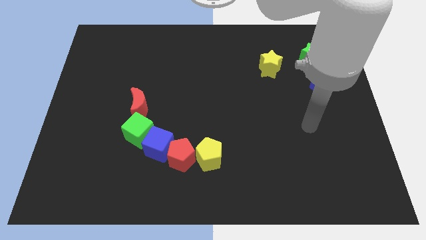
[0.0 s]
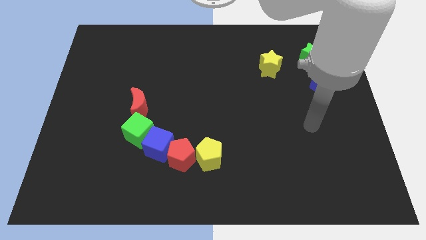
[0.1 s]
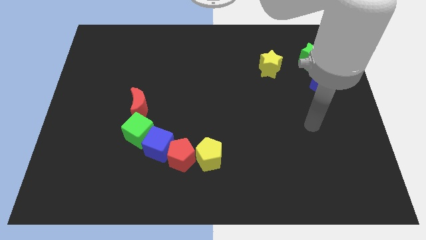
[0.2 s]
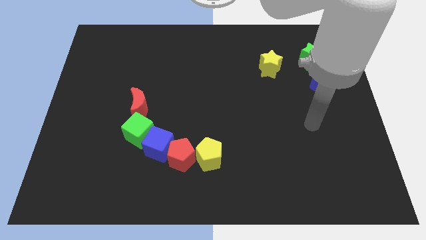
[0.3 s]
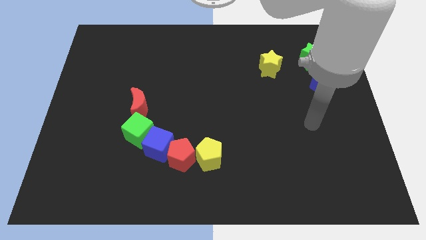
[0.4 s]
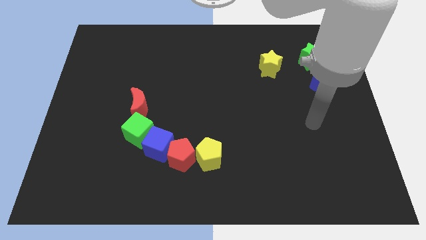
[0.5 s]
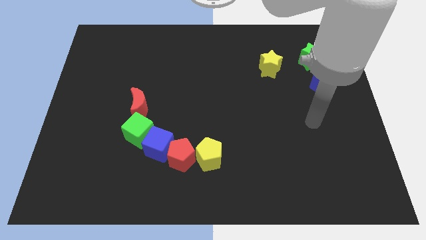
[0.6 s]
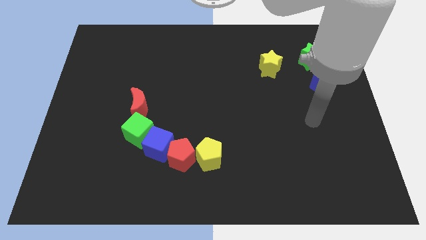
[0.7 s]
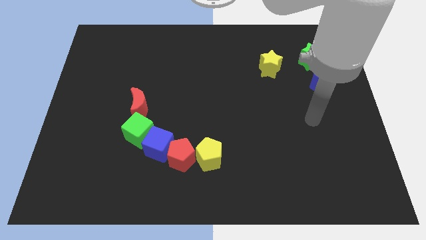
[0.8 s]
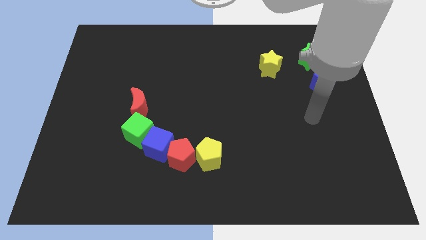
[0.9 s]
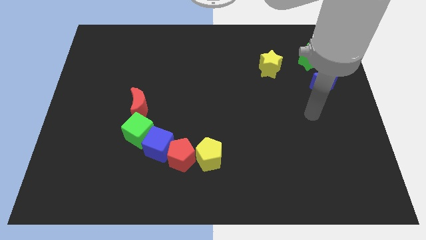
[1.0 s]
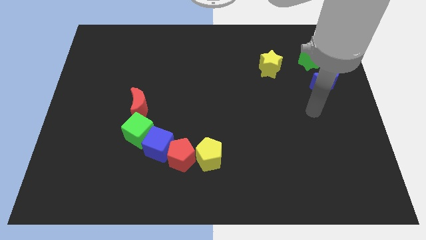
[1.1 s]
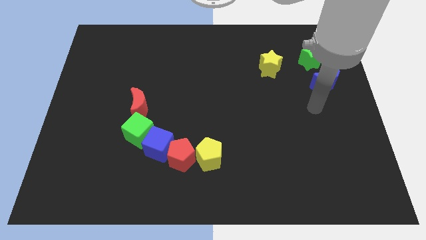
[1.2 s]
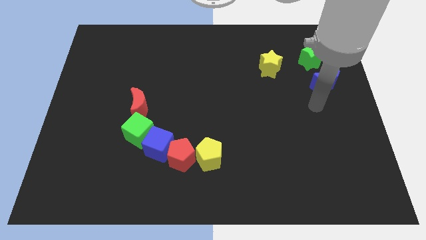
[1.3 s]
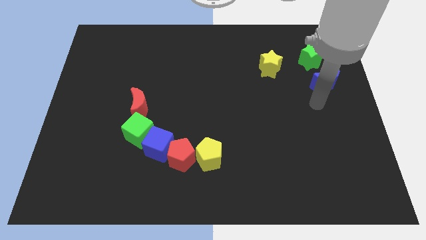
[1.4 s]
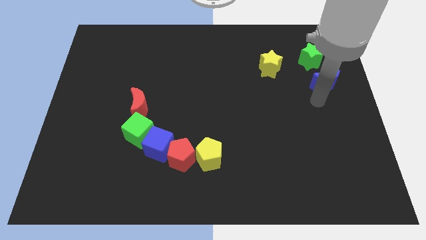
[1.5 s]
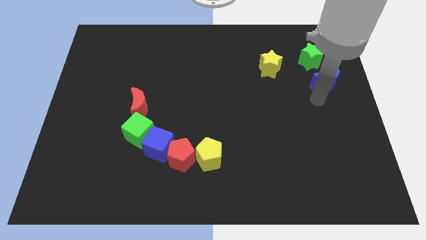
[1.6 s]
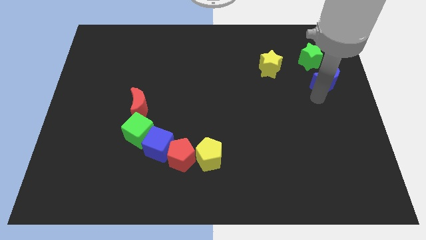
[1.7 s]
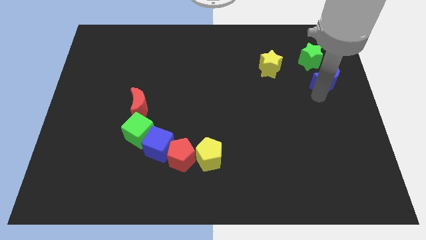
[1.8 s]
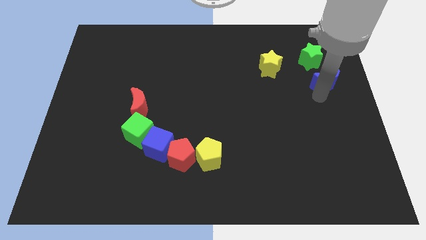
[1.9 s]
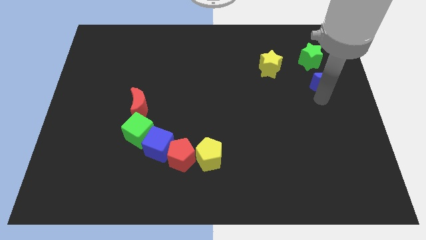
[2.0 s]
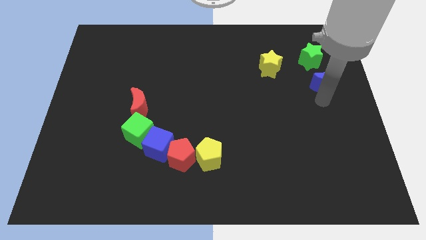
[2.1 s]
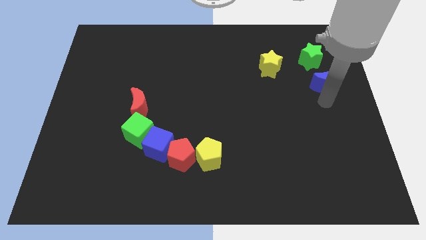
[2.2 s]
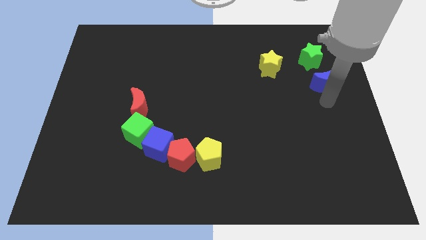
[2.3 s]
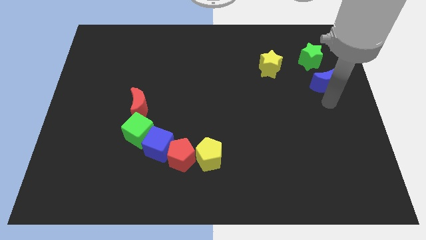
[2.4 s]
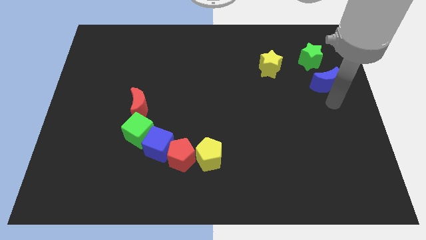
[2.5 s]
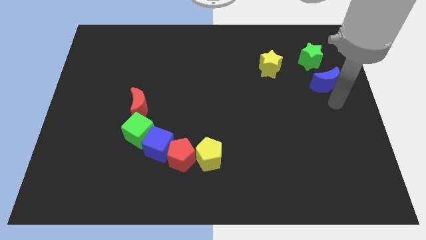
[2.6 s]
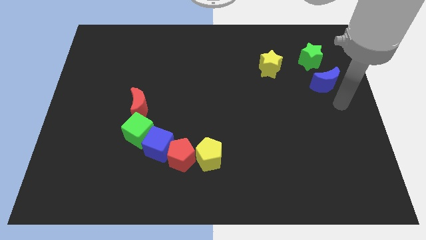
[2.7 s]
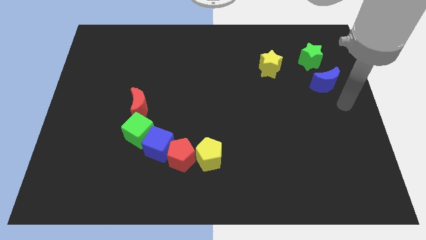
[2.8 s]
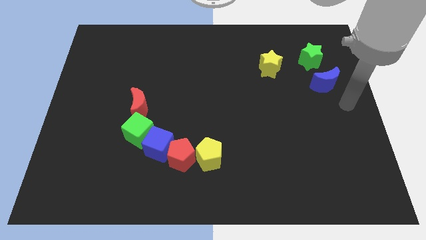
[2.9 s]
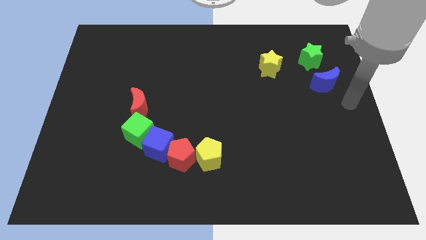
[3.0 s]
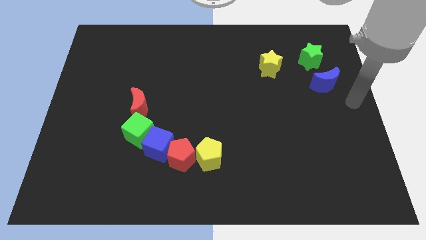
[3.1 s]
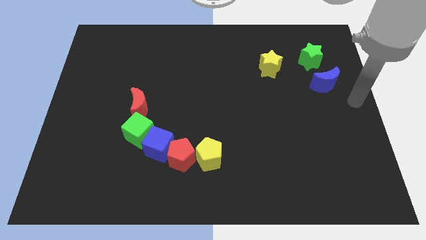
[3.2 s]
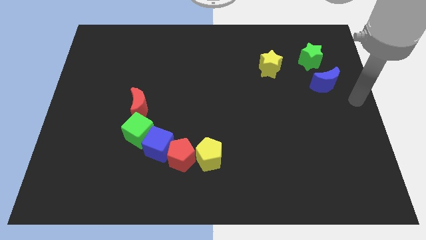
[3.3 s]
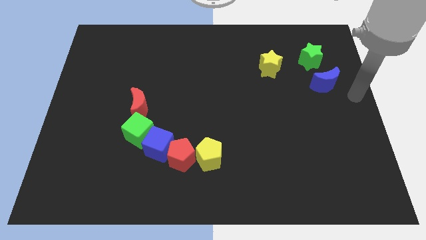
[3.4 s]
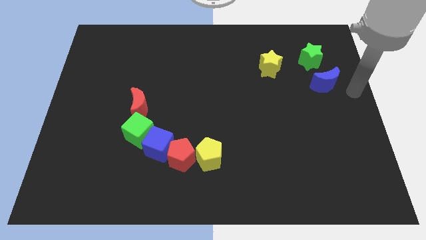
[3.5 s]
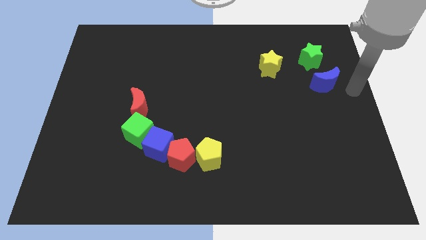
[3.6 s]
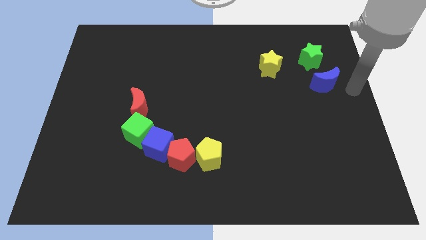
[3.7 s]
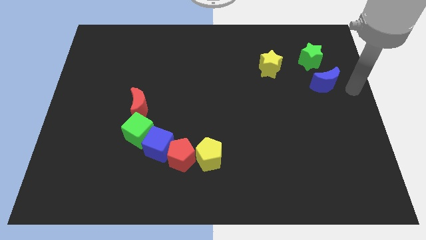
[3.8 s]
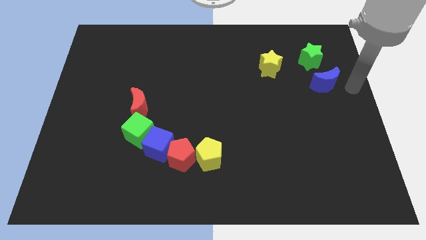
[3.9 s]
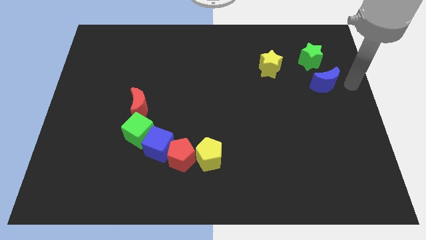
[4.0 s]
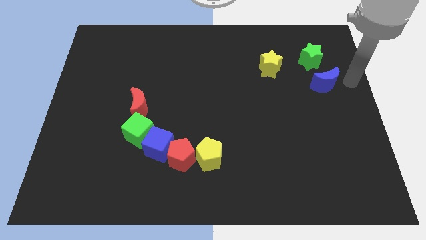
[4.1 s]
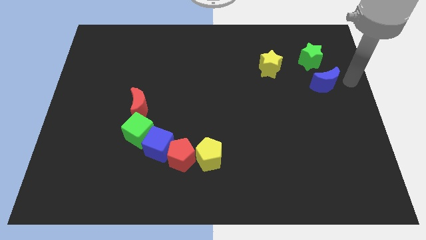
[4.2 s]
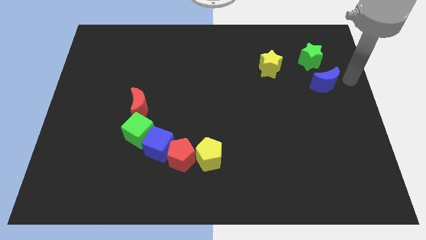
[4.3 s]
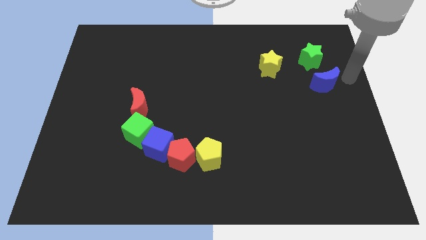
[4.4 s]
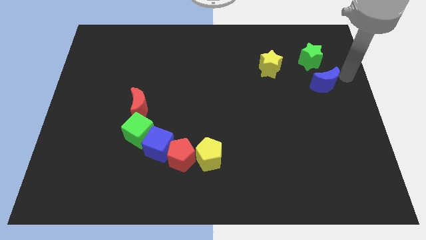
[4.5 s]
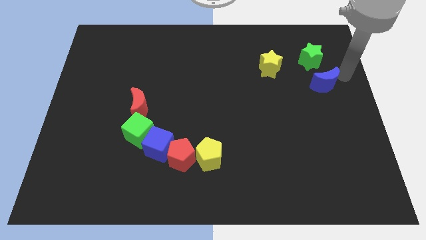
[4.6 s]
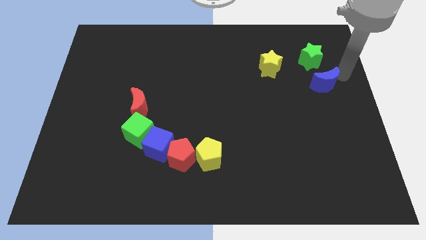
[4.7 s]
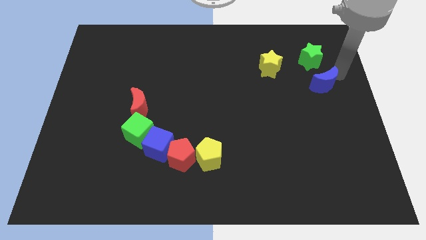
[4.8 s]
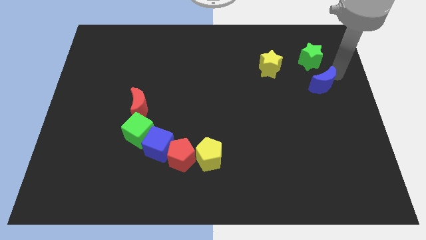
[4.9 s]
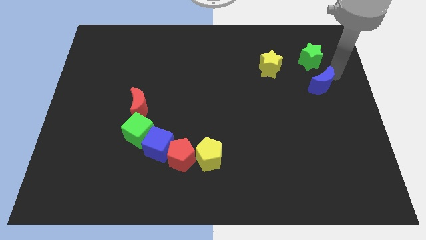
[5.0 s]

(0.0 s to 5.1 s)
tap on the top right side of blue moon

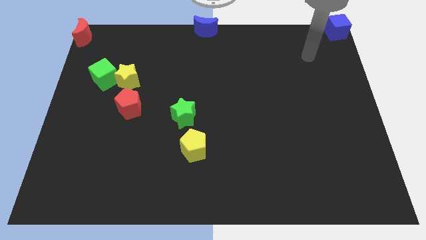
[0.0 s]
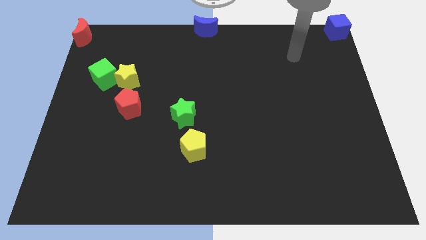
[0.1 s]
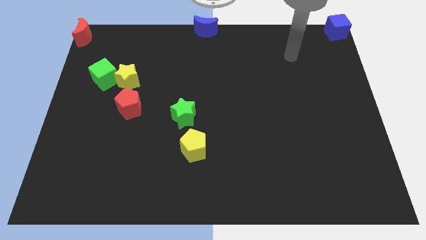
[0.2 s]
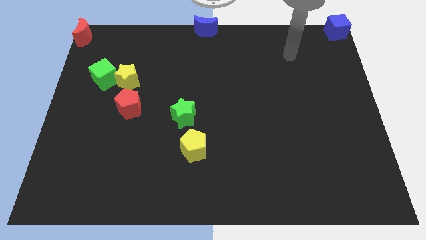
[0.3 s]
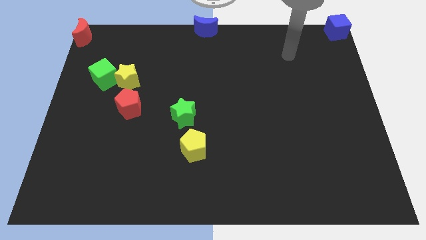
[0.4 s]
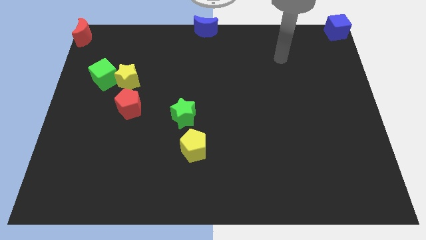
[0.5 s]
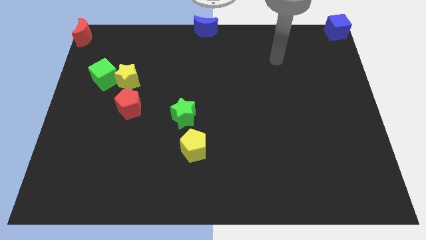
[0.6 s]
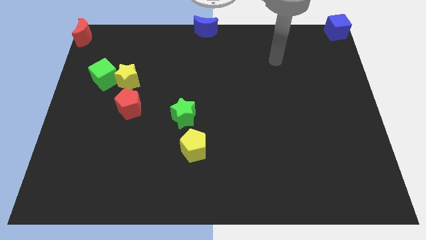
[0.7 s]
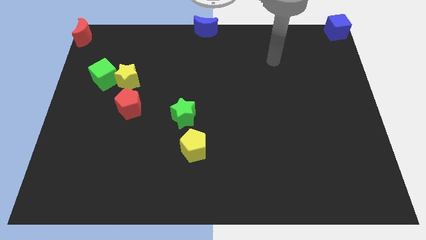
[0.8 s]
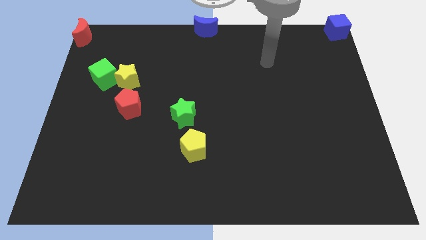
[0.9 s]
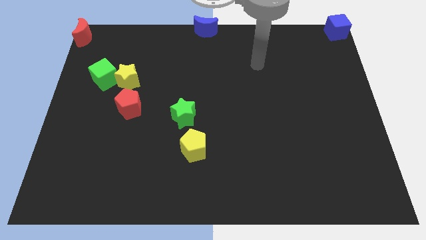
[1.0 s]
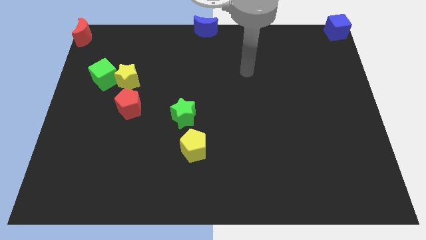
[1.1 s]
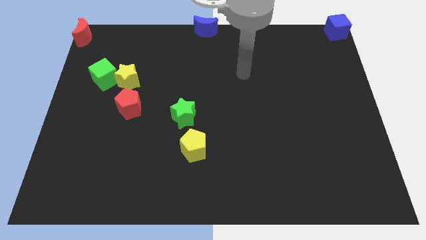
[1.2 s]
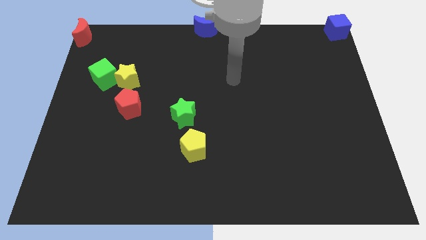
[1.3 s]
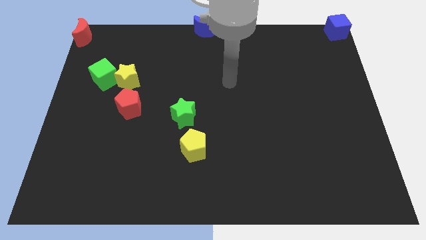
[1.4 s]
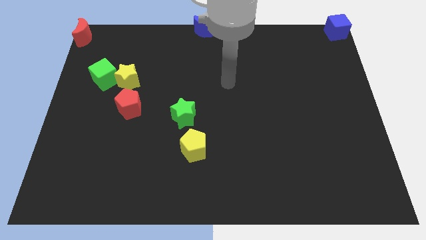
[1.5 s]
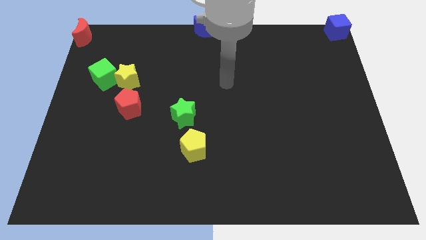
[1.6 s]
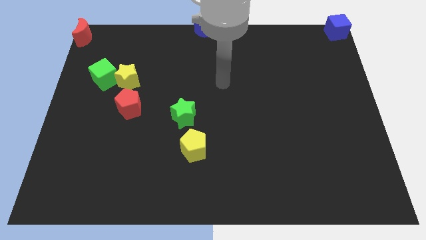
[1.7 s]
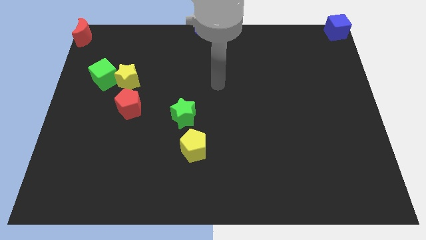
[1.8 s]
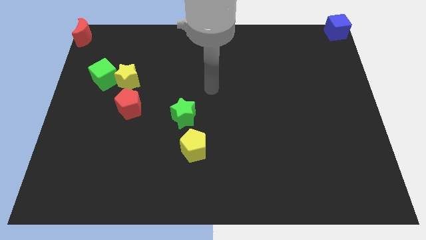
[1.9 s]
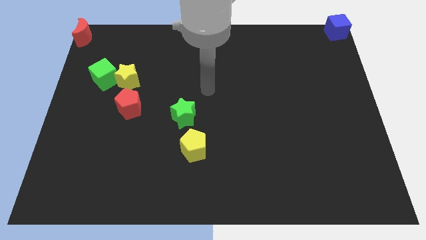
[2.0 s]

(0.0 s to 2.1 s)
move away from the blue cube

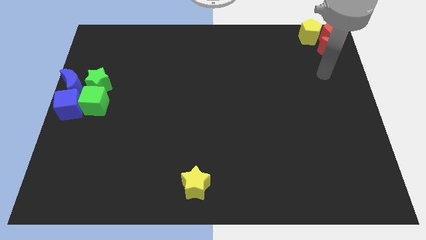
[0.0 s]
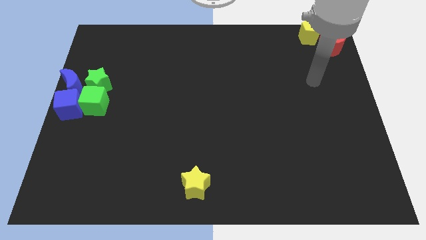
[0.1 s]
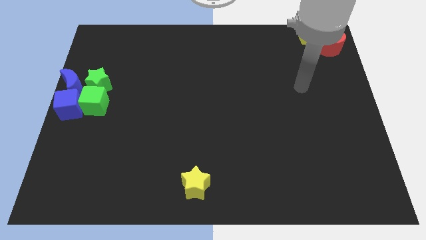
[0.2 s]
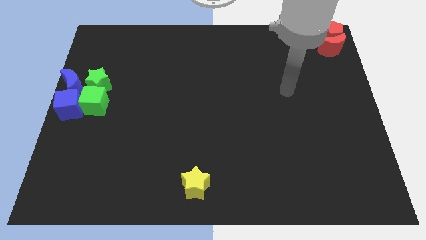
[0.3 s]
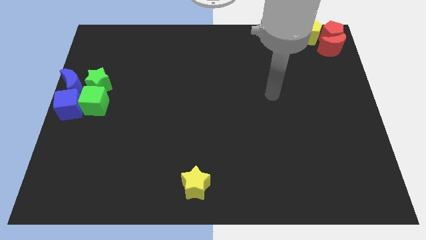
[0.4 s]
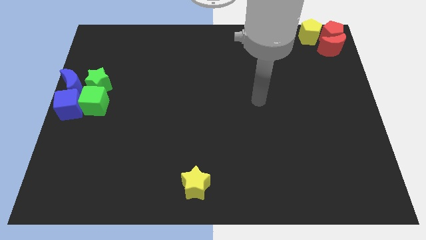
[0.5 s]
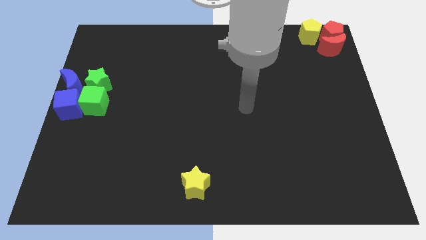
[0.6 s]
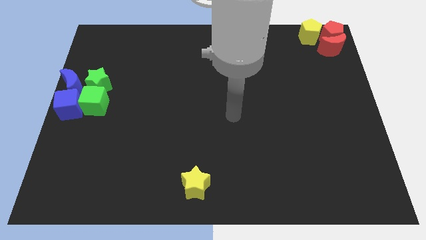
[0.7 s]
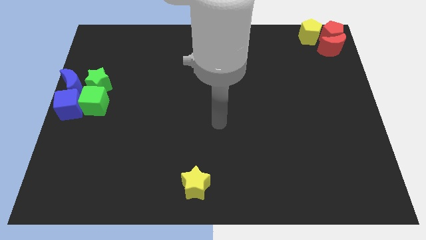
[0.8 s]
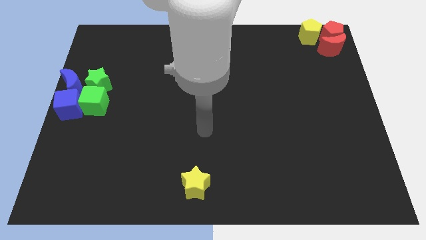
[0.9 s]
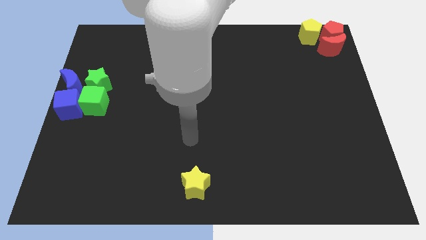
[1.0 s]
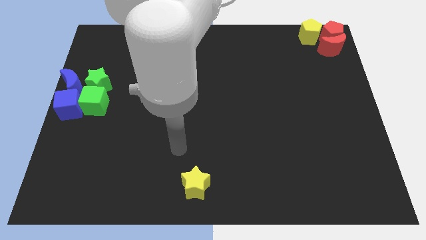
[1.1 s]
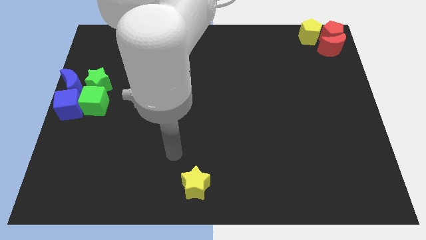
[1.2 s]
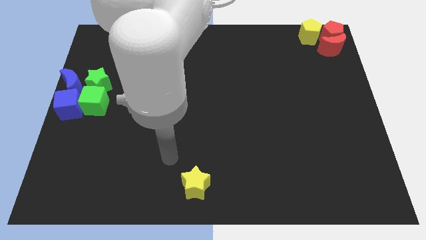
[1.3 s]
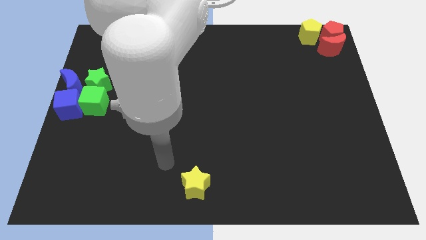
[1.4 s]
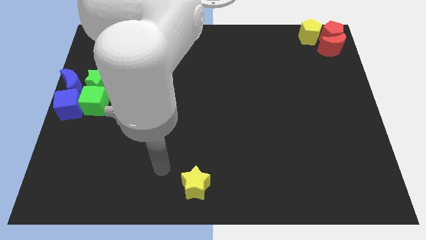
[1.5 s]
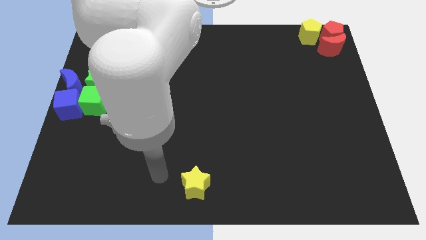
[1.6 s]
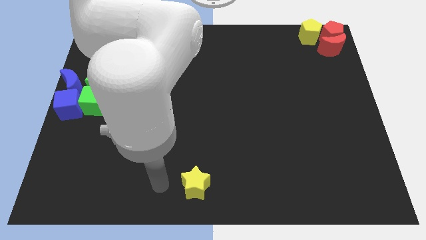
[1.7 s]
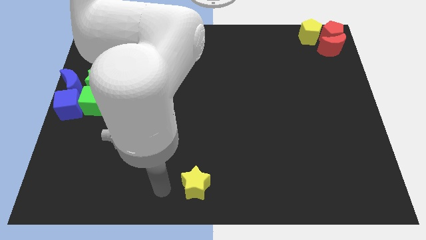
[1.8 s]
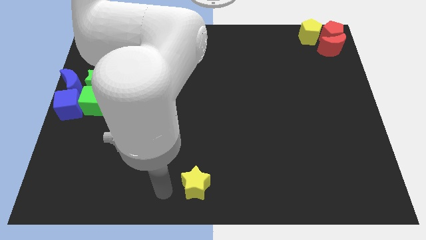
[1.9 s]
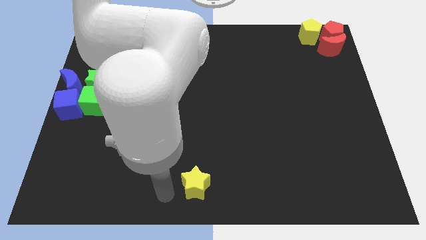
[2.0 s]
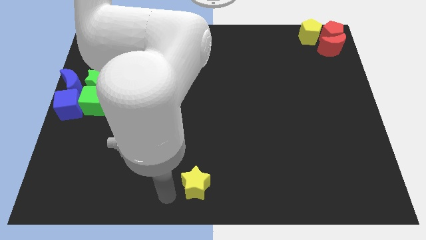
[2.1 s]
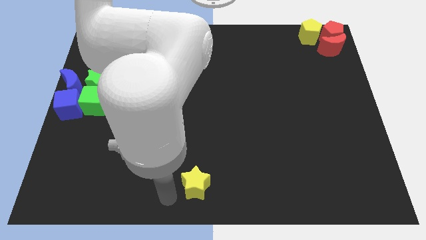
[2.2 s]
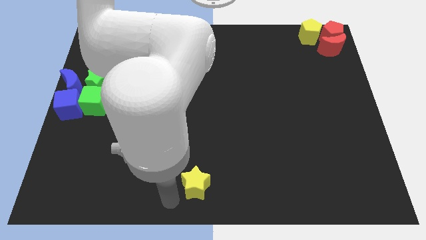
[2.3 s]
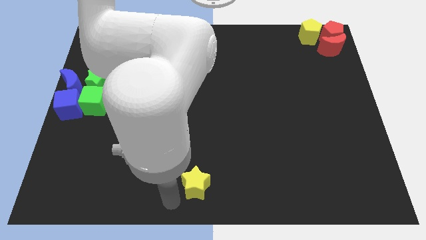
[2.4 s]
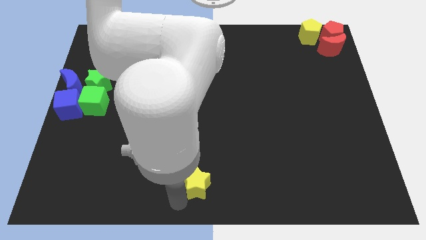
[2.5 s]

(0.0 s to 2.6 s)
move the arm towards the yellow star
